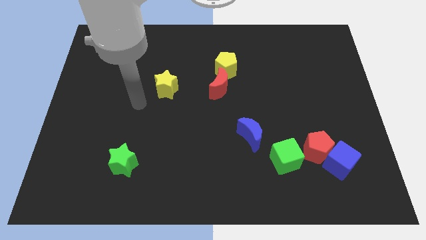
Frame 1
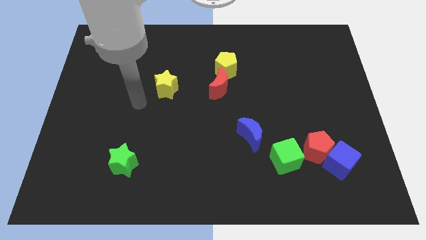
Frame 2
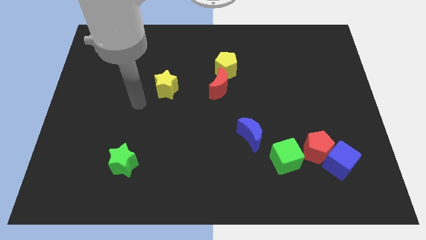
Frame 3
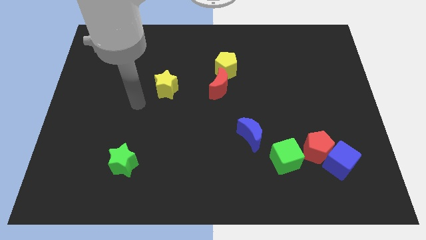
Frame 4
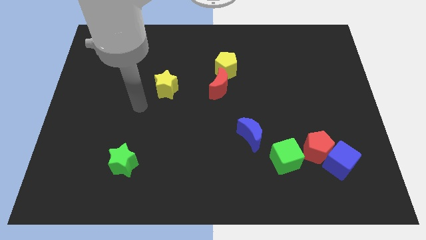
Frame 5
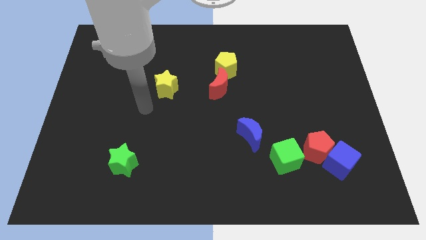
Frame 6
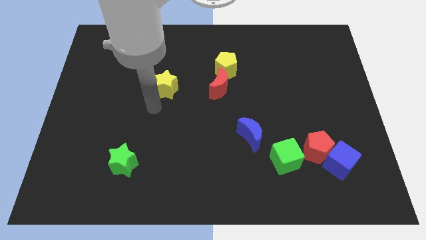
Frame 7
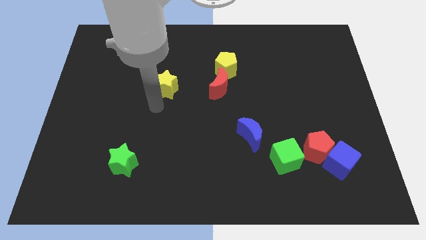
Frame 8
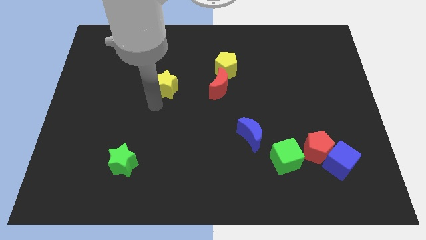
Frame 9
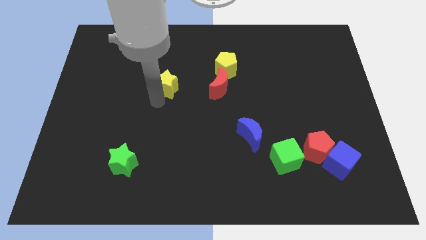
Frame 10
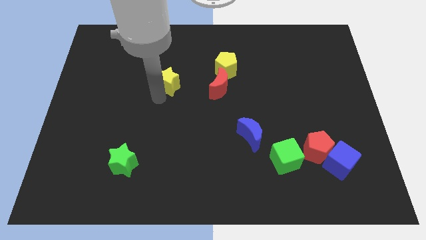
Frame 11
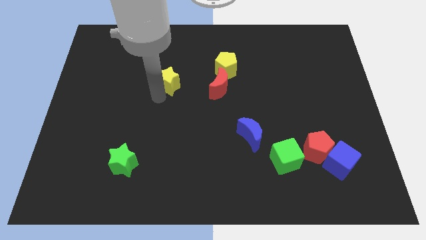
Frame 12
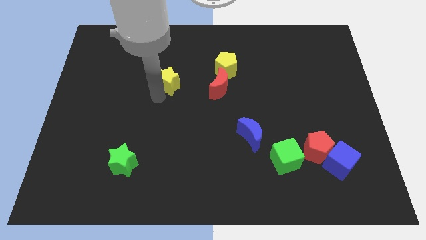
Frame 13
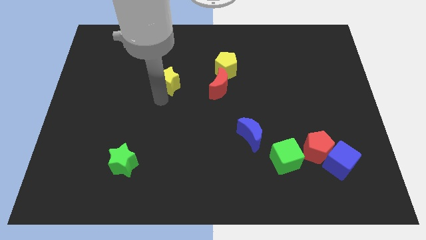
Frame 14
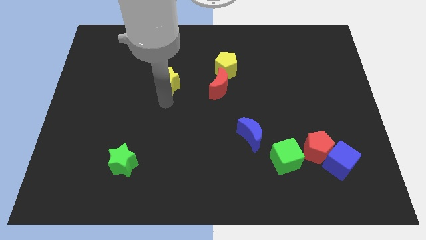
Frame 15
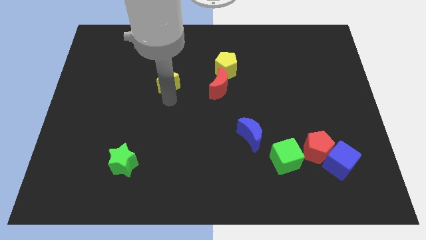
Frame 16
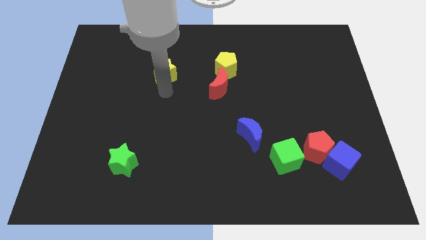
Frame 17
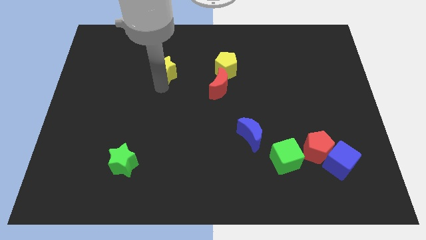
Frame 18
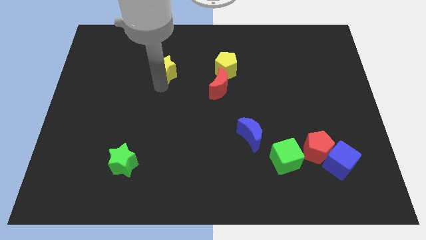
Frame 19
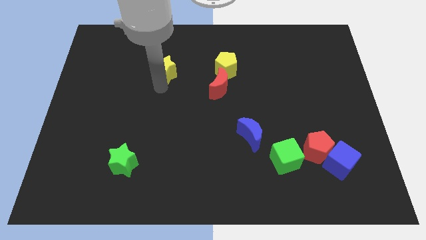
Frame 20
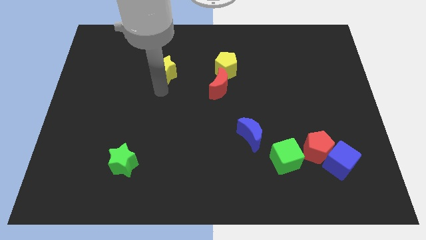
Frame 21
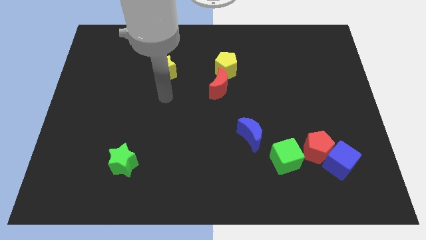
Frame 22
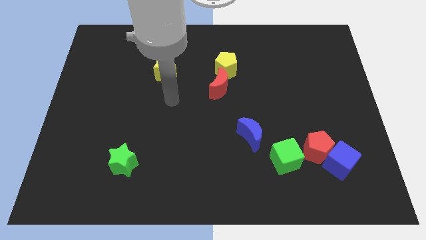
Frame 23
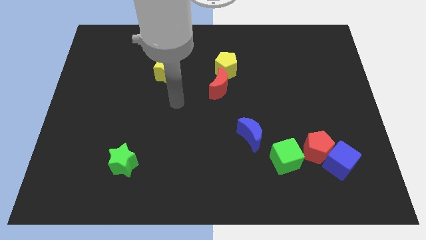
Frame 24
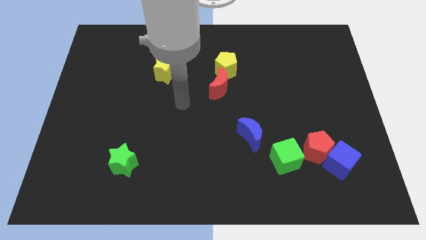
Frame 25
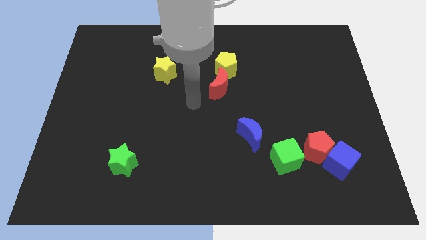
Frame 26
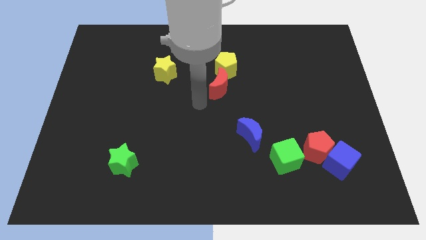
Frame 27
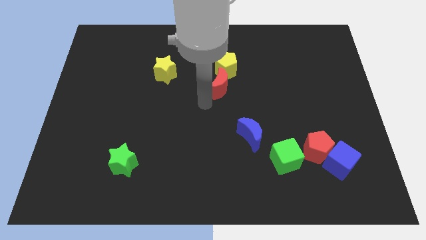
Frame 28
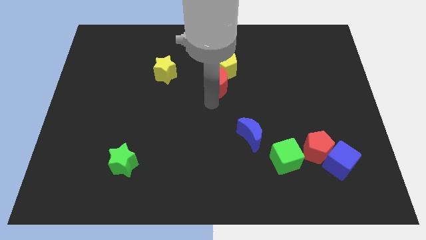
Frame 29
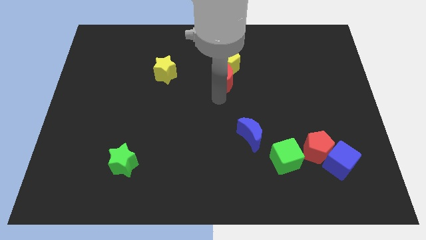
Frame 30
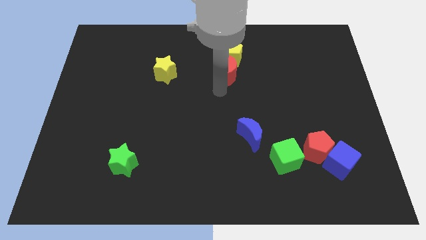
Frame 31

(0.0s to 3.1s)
place the yellow star to the left of the yellow pentagon

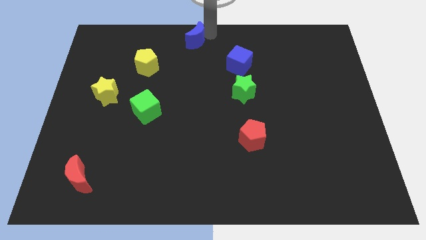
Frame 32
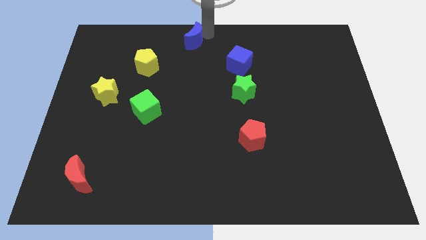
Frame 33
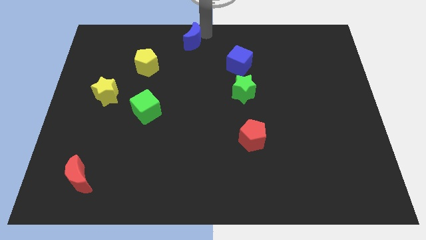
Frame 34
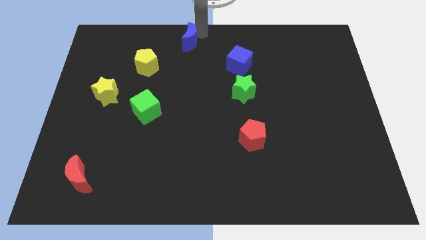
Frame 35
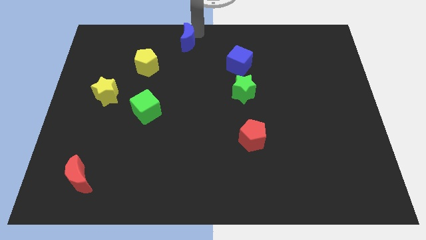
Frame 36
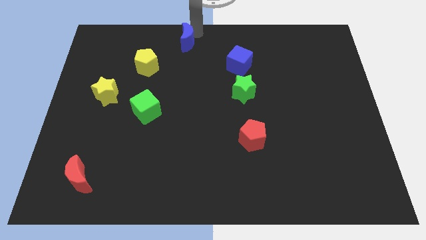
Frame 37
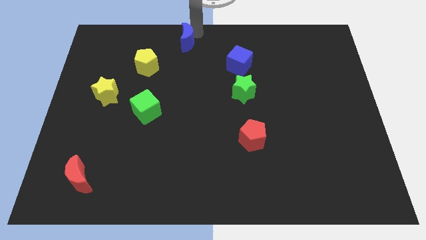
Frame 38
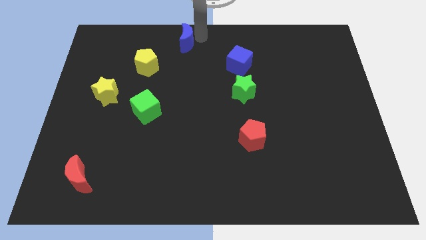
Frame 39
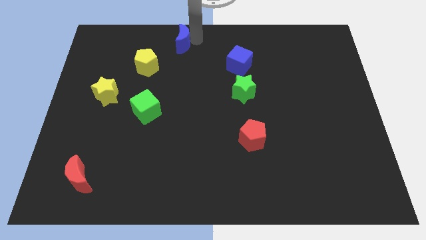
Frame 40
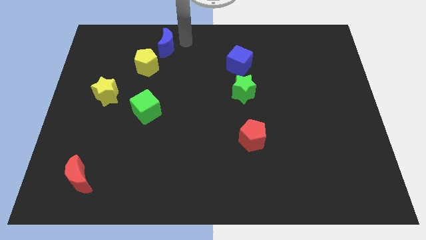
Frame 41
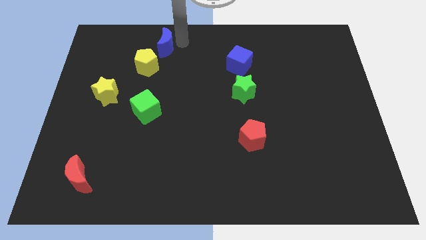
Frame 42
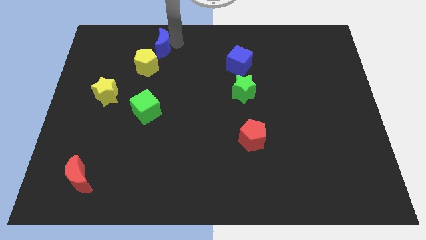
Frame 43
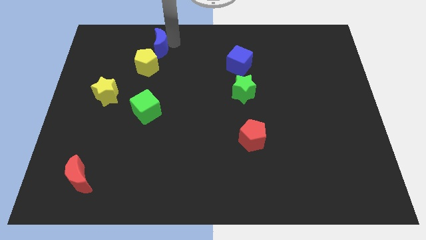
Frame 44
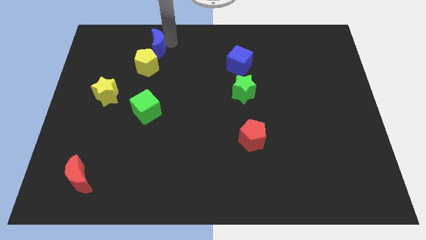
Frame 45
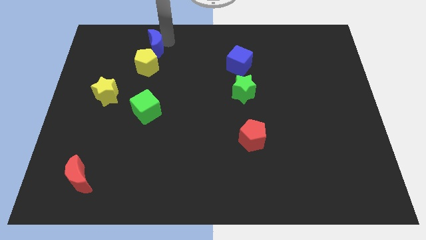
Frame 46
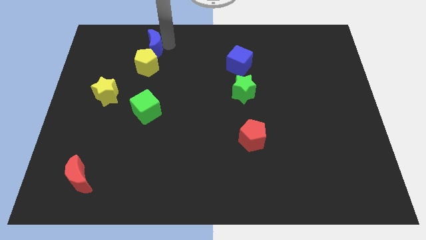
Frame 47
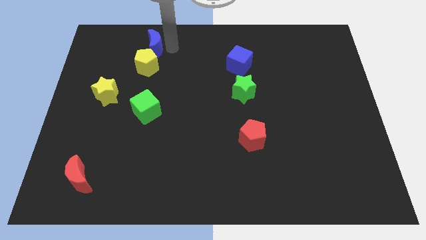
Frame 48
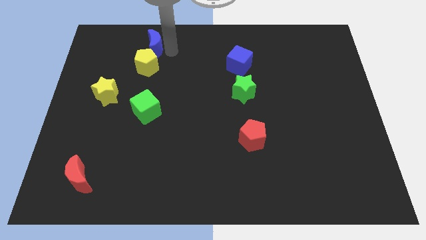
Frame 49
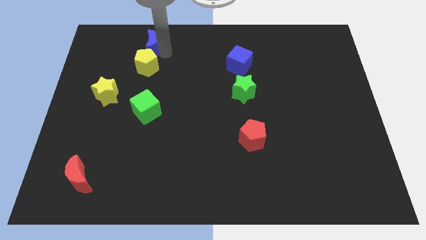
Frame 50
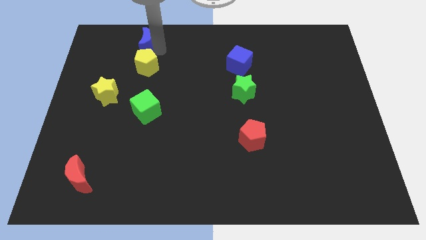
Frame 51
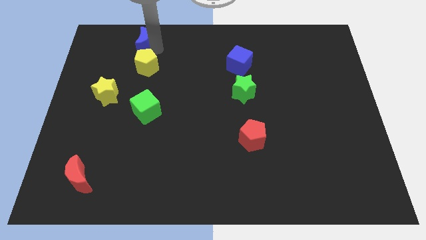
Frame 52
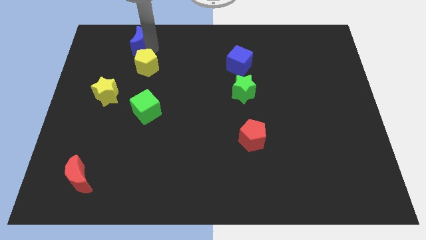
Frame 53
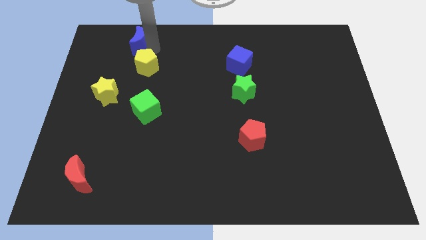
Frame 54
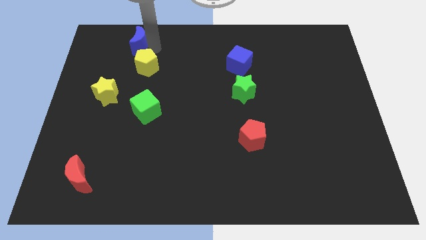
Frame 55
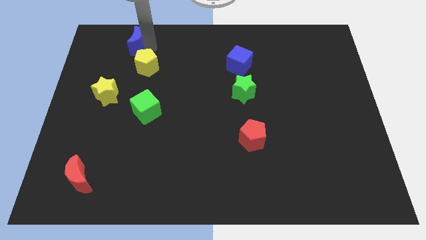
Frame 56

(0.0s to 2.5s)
move the blue moon towards the left side of the board

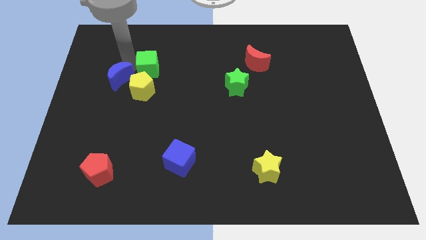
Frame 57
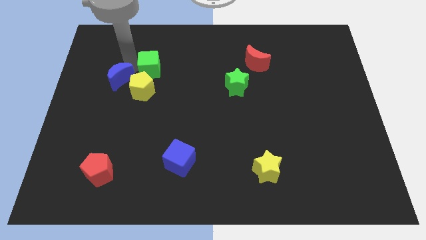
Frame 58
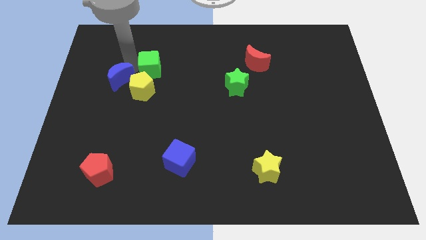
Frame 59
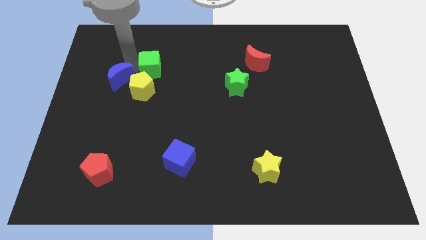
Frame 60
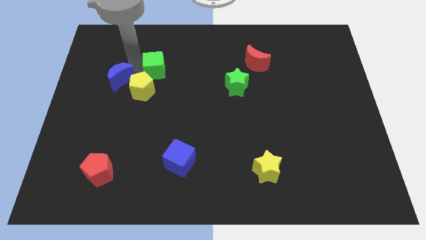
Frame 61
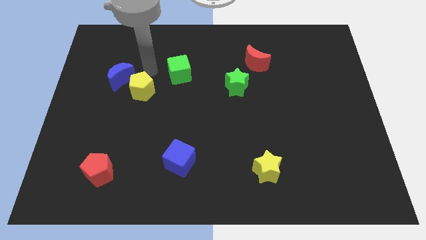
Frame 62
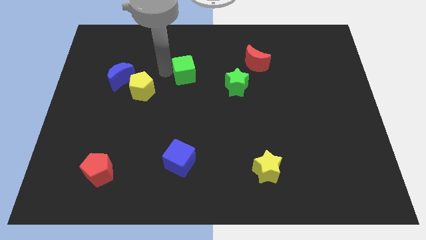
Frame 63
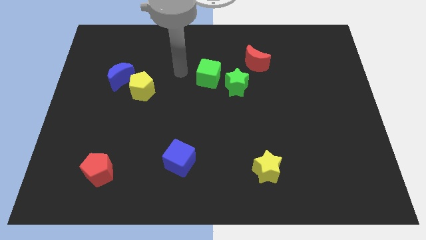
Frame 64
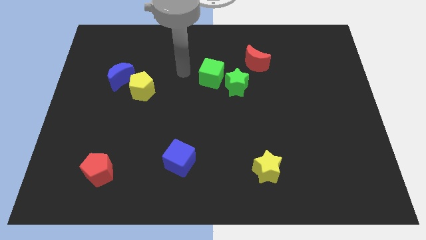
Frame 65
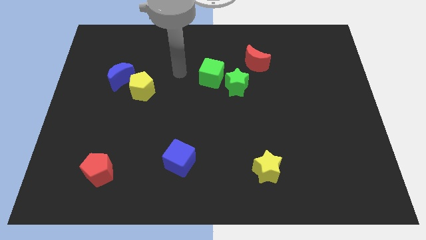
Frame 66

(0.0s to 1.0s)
push the green cube to the left of the green star

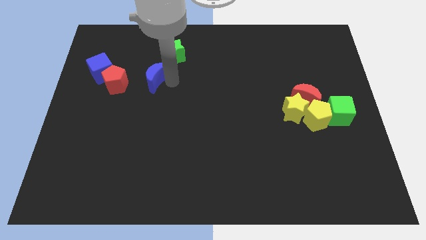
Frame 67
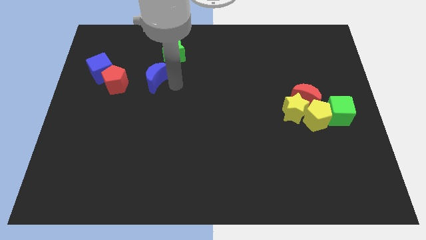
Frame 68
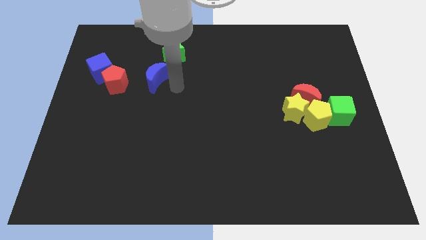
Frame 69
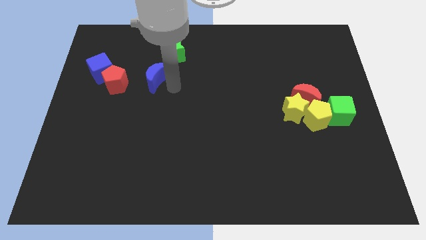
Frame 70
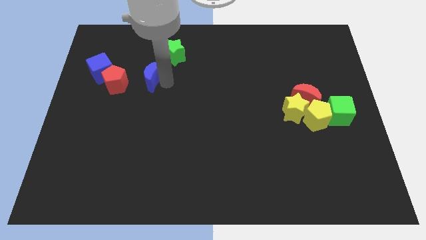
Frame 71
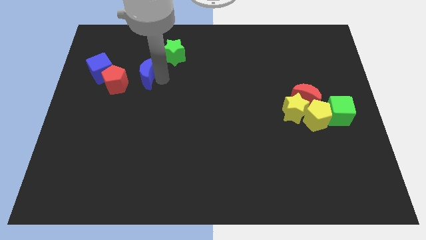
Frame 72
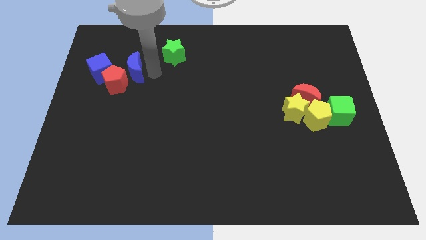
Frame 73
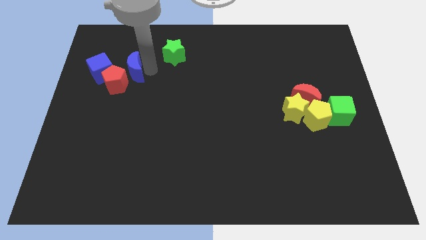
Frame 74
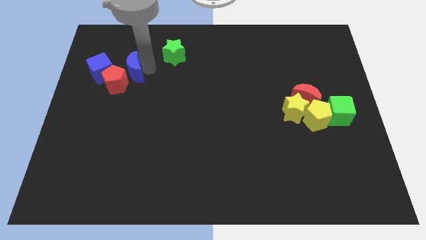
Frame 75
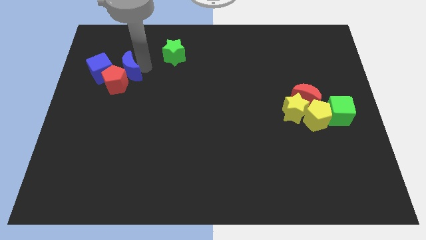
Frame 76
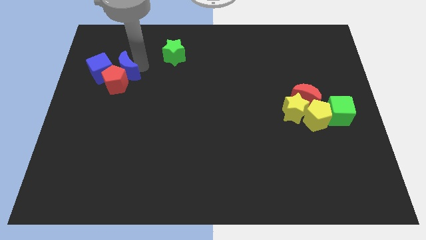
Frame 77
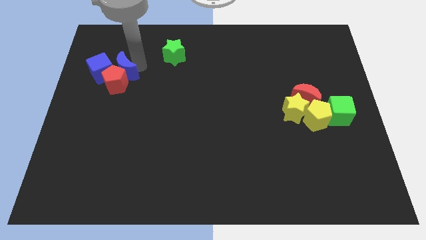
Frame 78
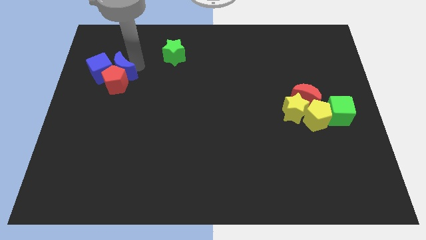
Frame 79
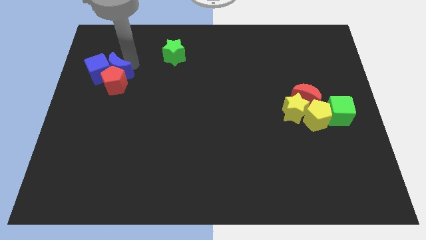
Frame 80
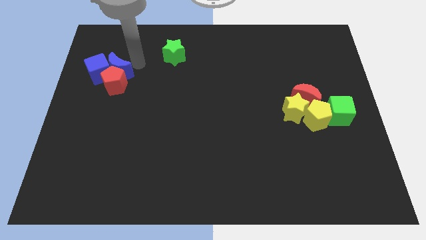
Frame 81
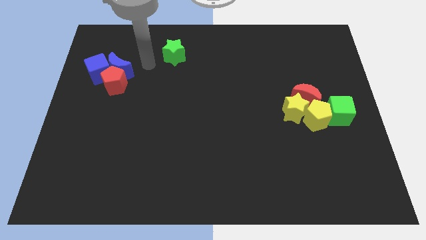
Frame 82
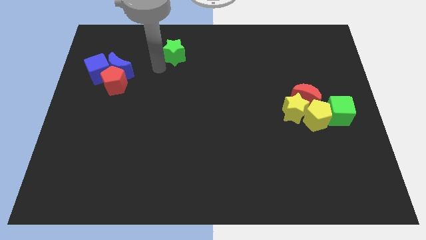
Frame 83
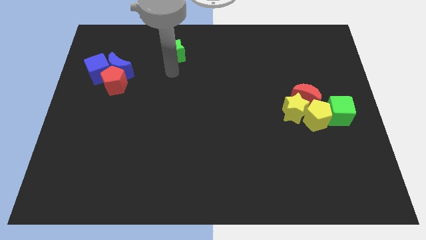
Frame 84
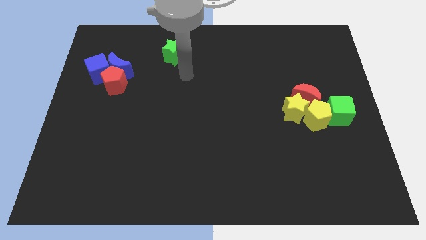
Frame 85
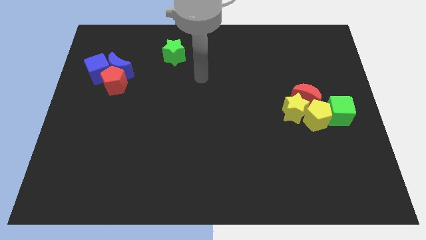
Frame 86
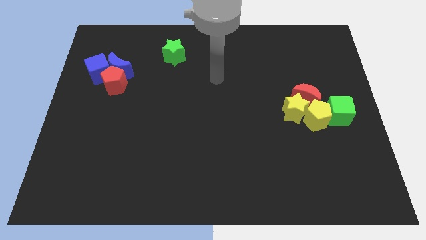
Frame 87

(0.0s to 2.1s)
place blue moon to right of blue cube

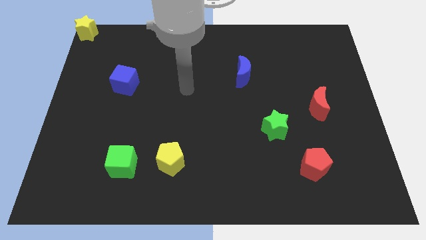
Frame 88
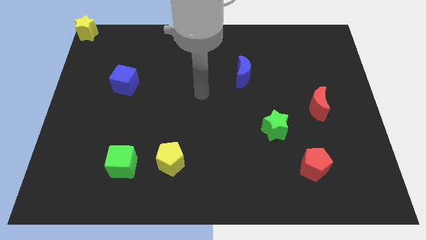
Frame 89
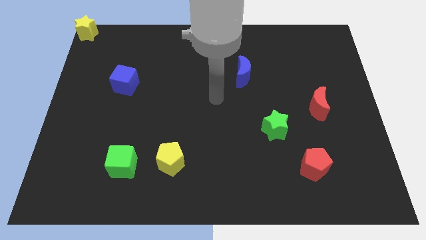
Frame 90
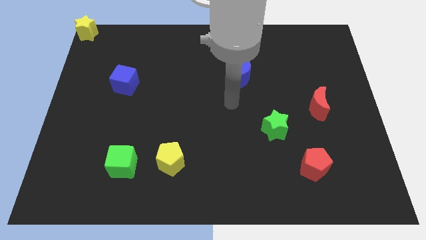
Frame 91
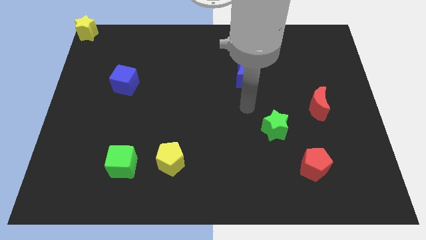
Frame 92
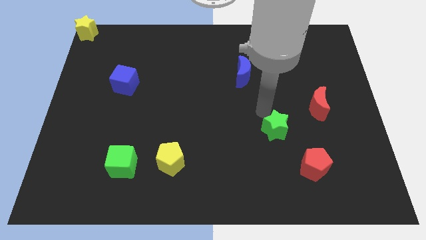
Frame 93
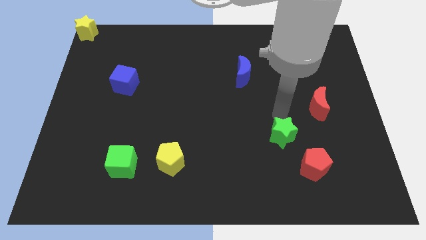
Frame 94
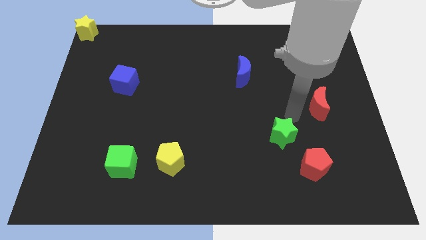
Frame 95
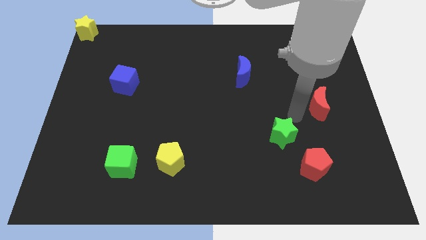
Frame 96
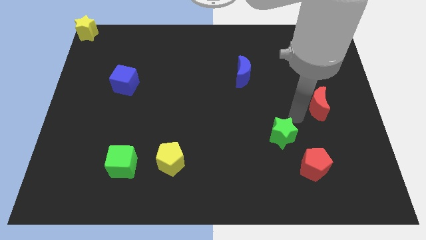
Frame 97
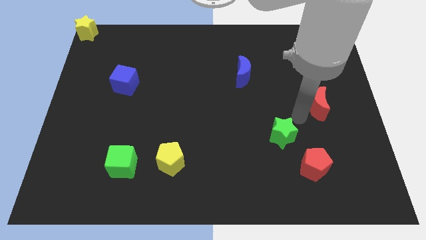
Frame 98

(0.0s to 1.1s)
slightly move the green star top left diagonally to red pentagon
